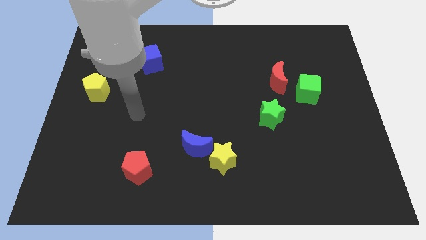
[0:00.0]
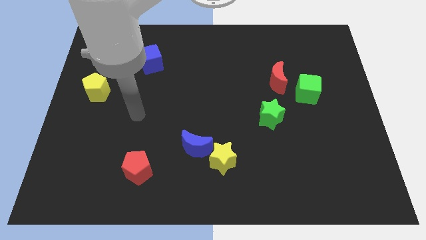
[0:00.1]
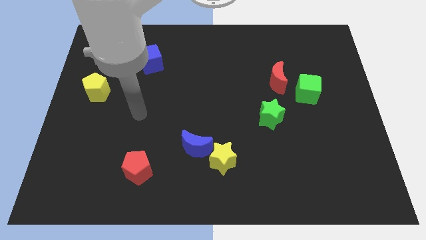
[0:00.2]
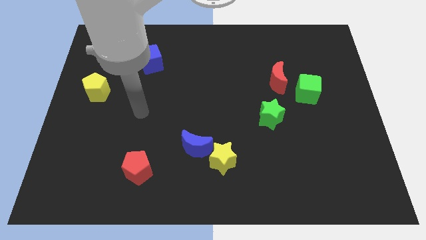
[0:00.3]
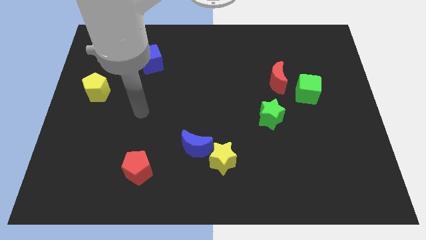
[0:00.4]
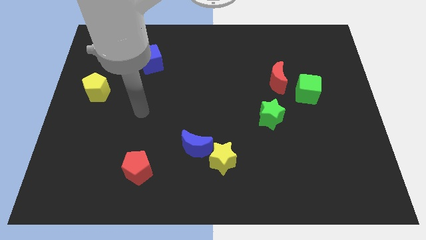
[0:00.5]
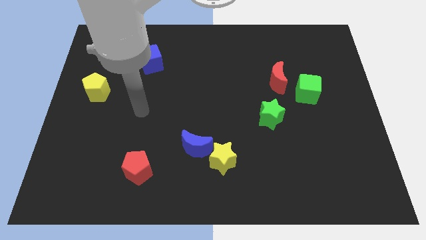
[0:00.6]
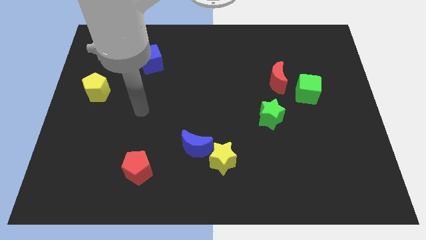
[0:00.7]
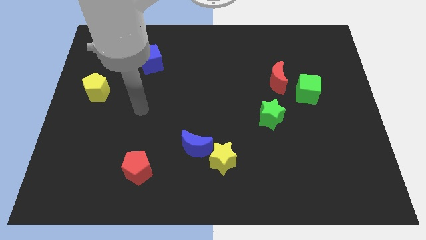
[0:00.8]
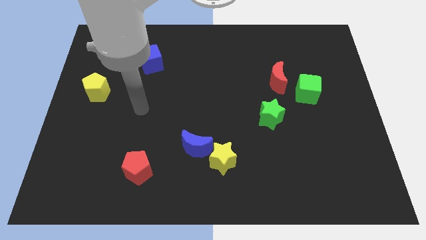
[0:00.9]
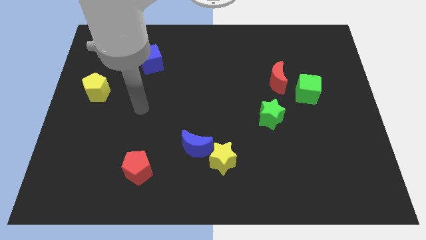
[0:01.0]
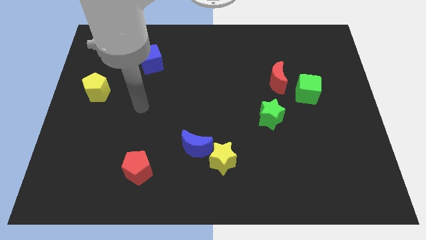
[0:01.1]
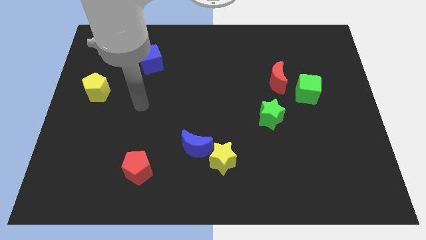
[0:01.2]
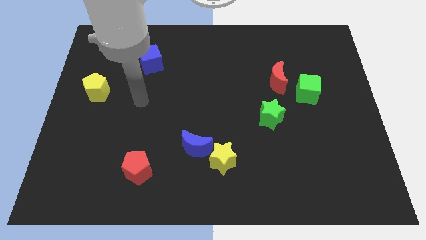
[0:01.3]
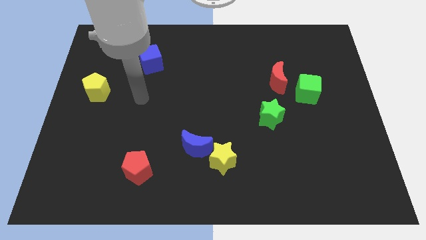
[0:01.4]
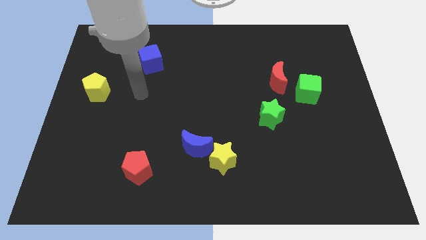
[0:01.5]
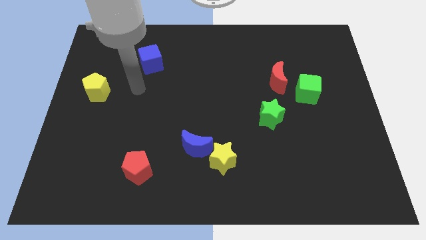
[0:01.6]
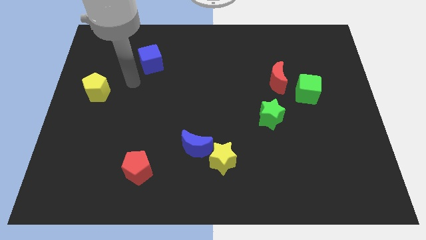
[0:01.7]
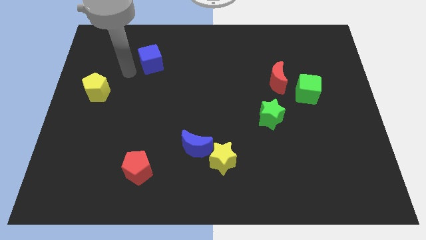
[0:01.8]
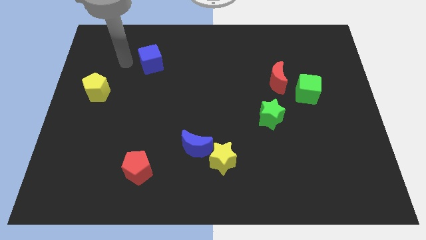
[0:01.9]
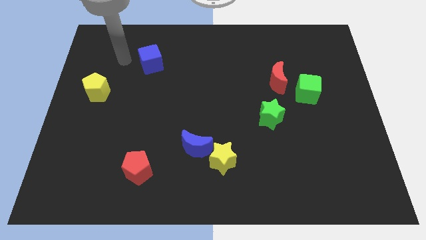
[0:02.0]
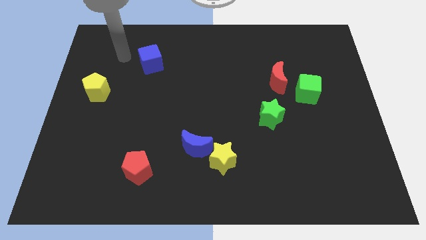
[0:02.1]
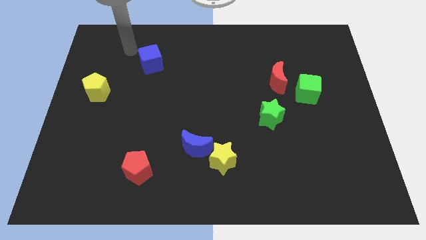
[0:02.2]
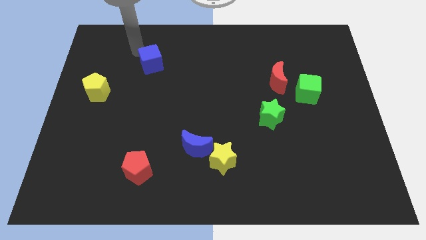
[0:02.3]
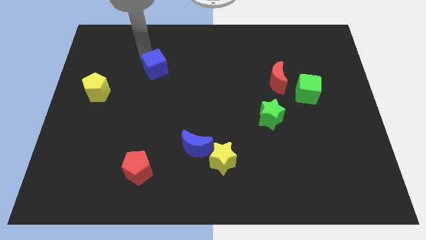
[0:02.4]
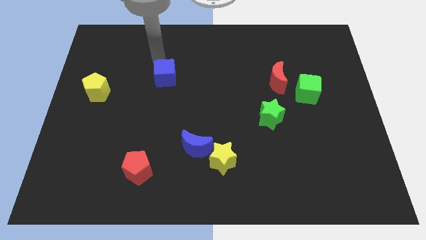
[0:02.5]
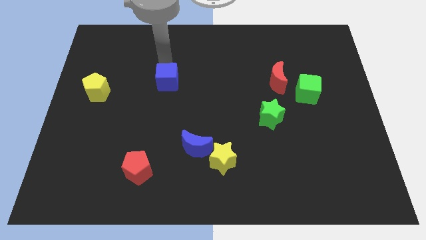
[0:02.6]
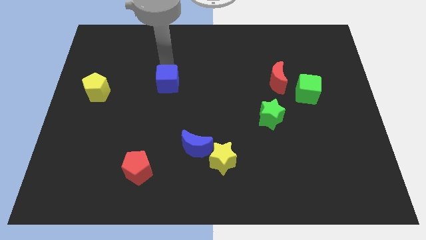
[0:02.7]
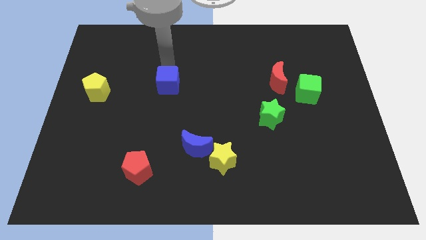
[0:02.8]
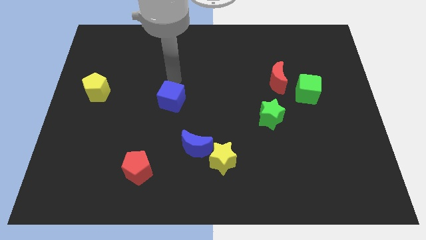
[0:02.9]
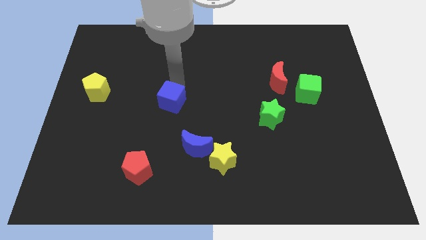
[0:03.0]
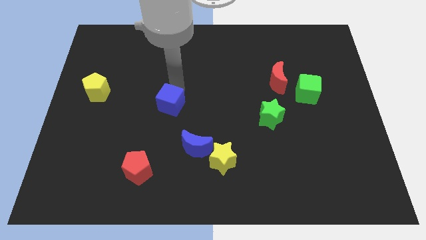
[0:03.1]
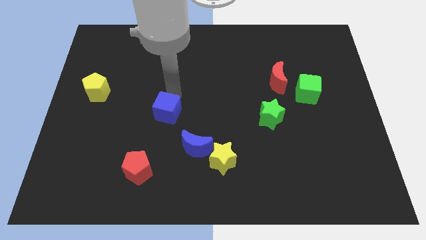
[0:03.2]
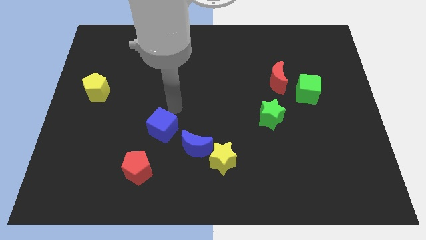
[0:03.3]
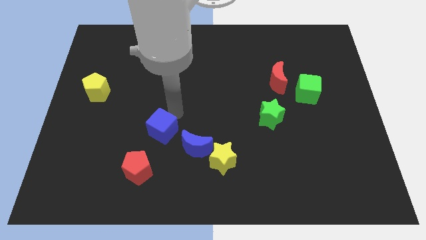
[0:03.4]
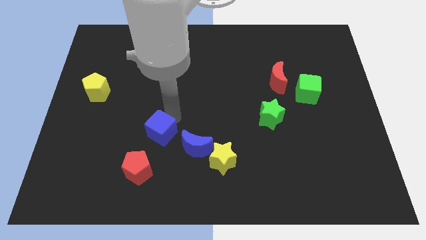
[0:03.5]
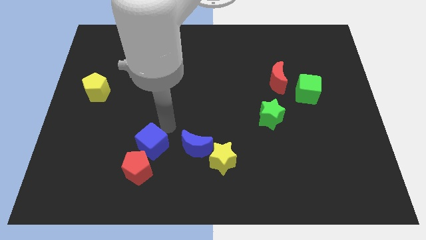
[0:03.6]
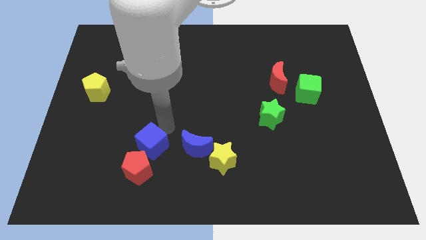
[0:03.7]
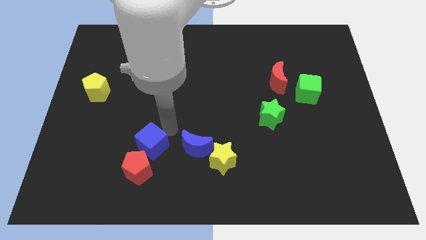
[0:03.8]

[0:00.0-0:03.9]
move blue cube close to the red pentagon

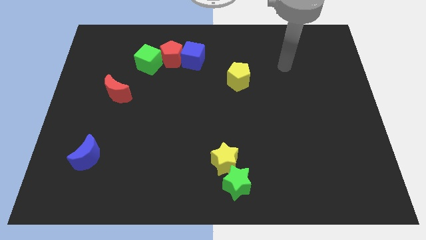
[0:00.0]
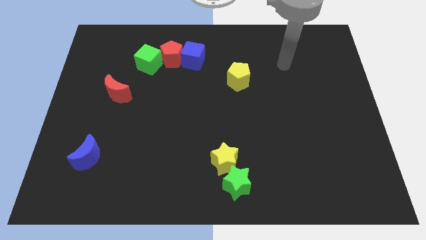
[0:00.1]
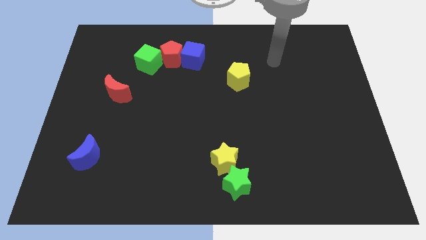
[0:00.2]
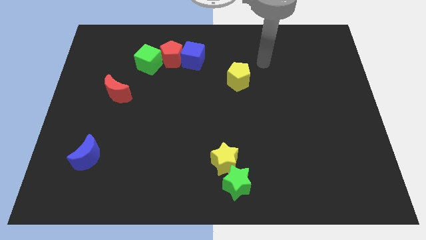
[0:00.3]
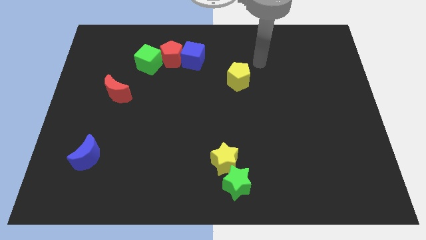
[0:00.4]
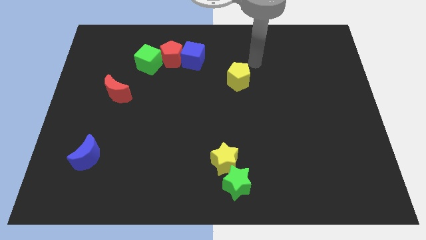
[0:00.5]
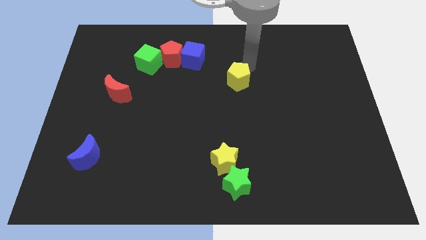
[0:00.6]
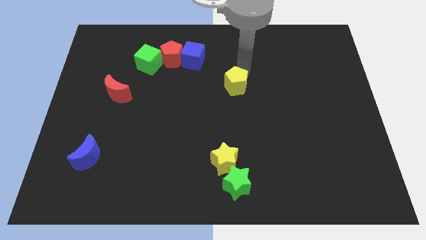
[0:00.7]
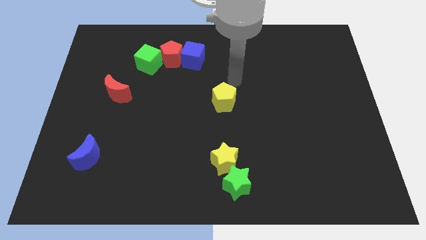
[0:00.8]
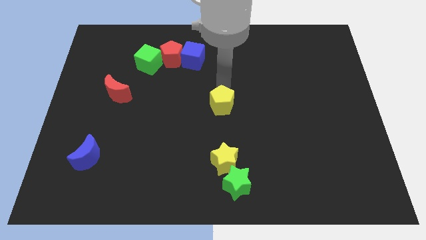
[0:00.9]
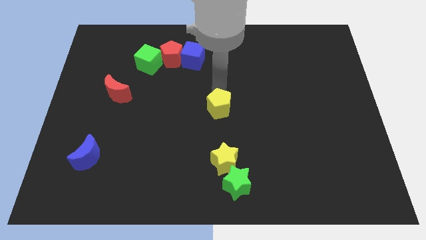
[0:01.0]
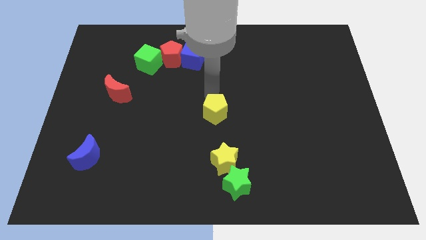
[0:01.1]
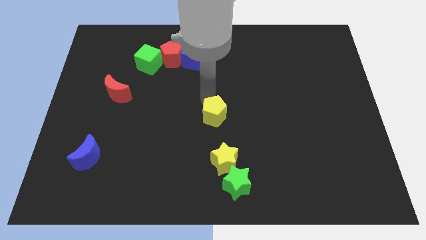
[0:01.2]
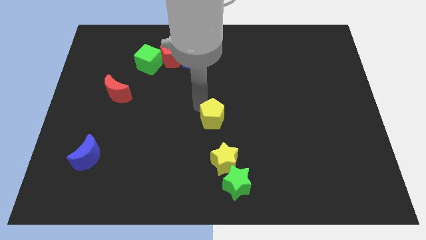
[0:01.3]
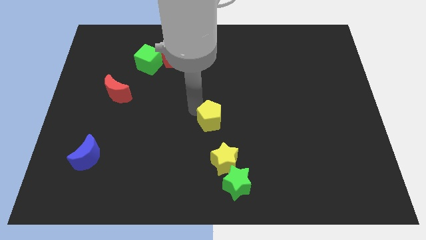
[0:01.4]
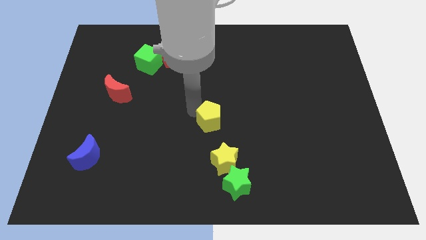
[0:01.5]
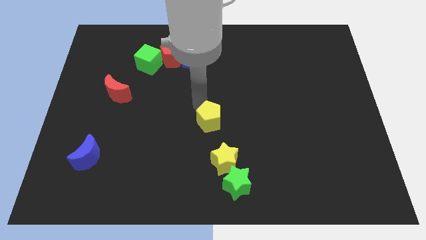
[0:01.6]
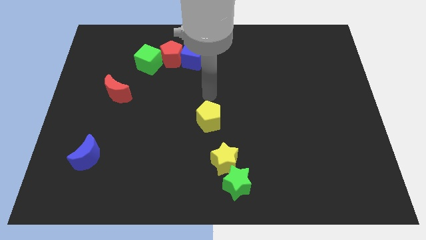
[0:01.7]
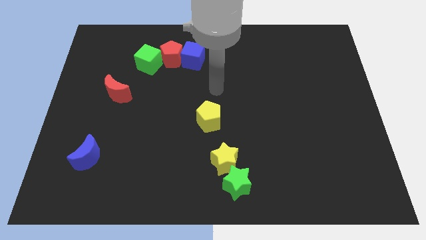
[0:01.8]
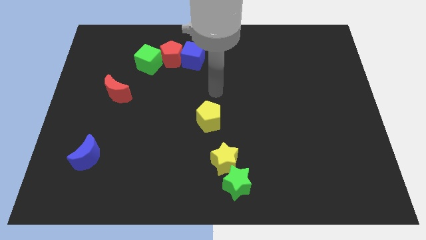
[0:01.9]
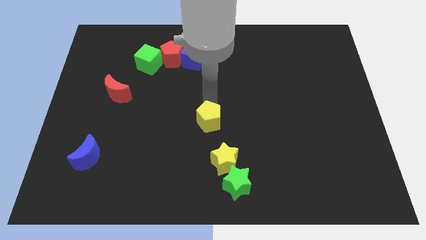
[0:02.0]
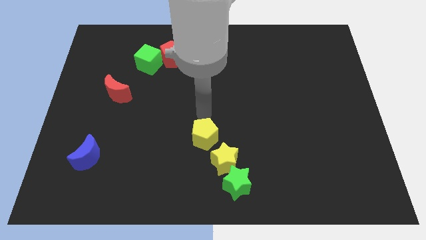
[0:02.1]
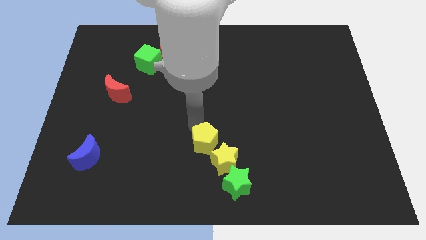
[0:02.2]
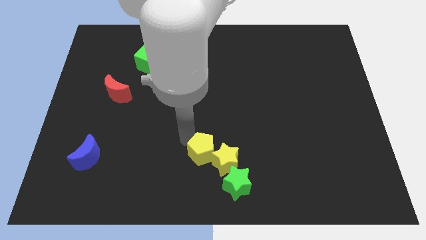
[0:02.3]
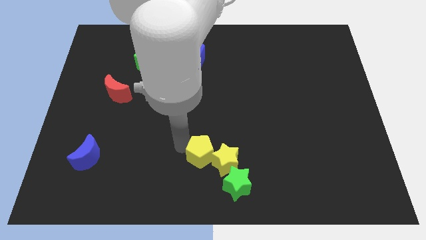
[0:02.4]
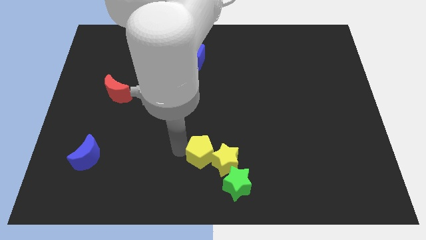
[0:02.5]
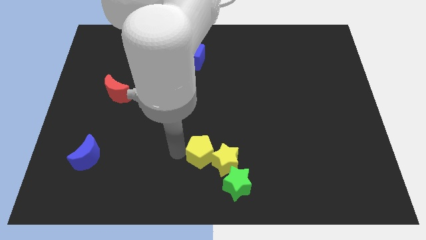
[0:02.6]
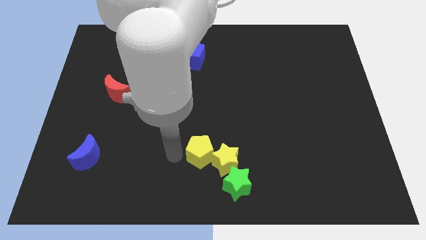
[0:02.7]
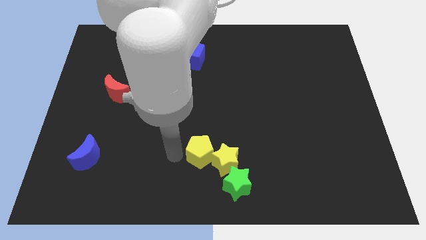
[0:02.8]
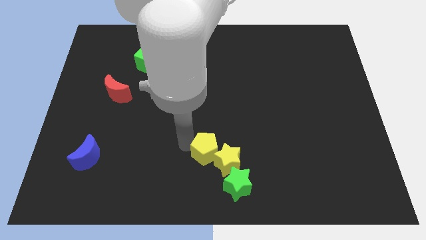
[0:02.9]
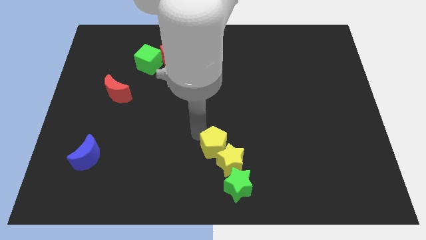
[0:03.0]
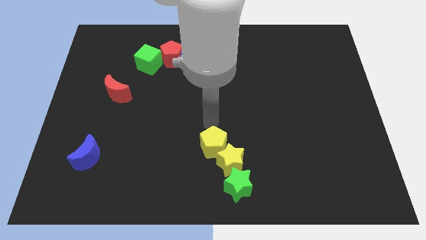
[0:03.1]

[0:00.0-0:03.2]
push the yellow pentagon into the yellow star

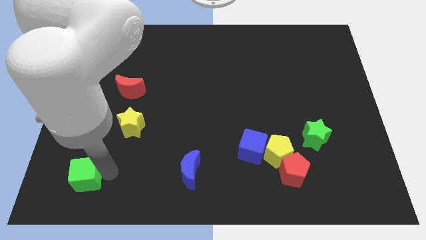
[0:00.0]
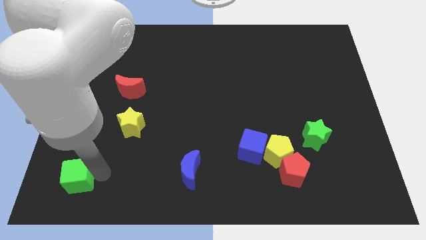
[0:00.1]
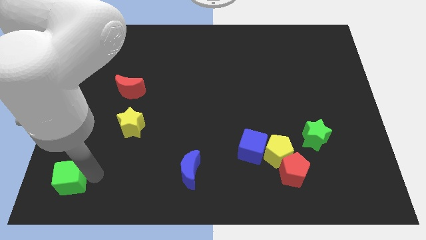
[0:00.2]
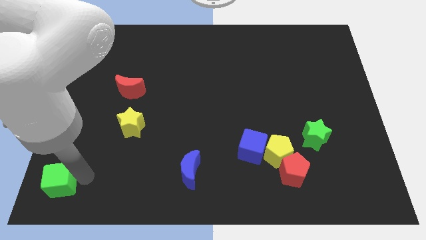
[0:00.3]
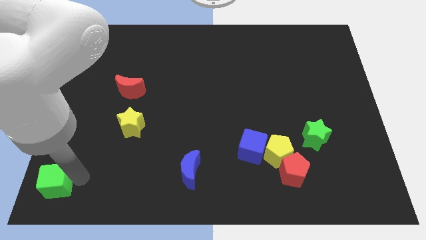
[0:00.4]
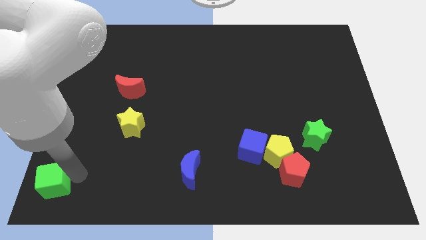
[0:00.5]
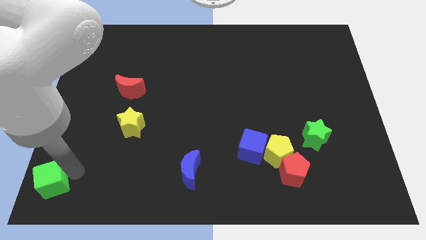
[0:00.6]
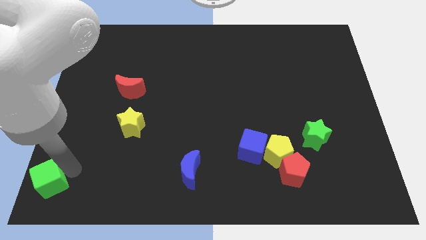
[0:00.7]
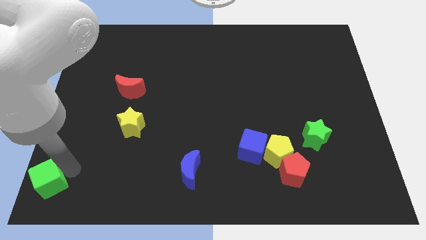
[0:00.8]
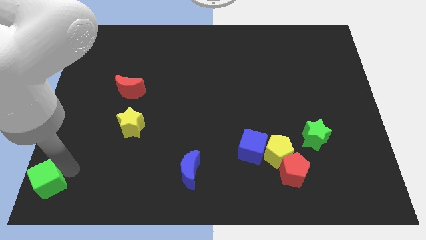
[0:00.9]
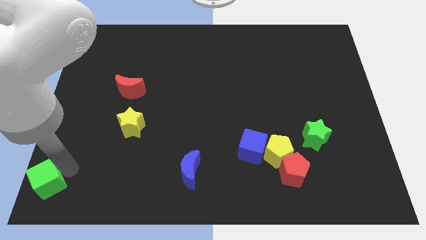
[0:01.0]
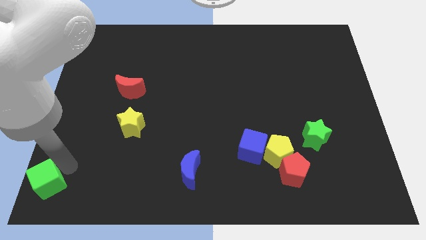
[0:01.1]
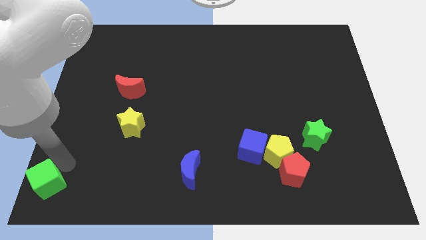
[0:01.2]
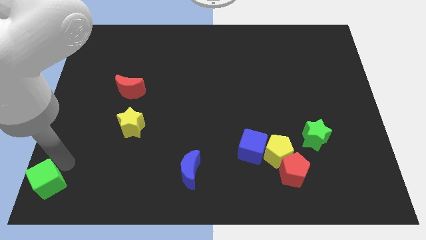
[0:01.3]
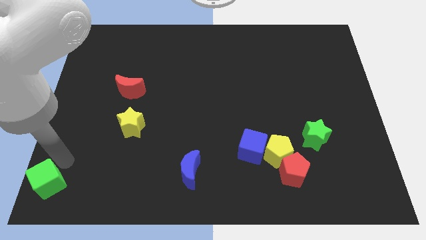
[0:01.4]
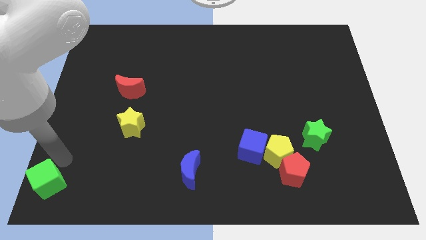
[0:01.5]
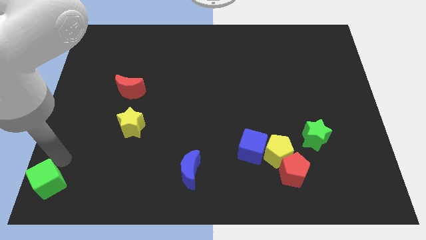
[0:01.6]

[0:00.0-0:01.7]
push the green cube towards the bottom left corner of the board

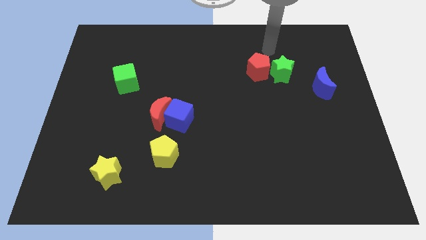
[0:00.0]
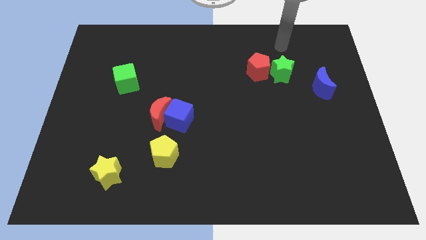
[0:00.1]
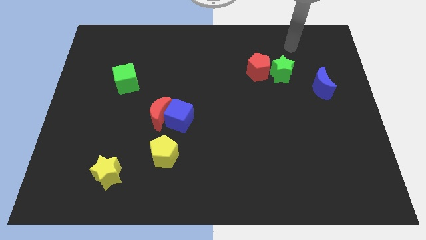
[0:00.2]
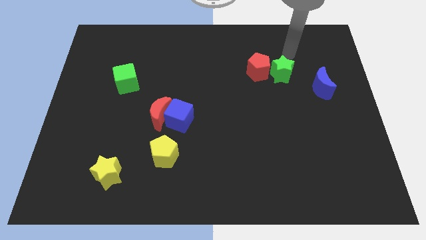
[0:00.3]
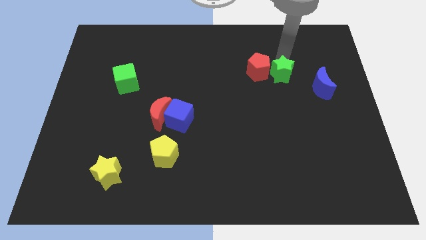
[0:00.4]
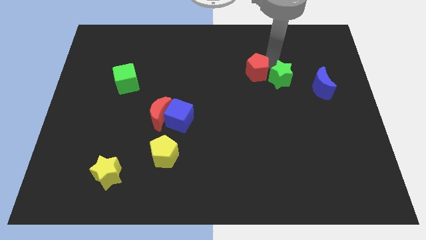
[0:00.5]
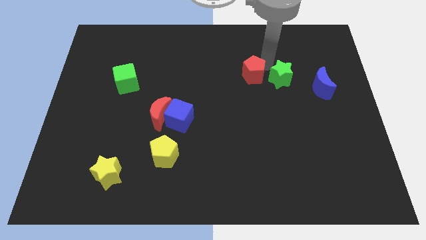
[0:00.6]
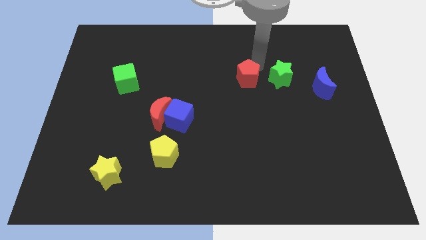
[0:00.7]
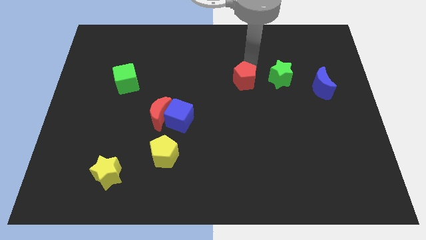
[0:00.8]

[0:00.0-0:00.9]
place the red pentagon left of the green star
